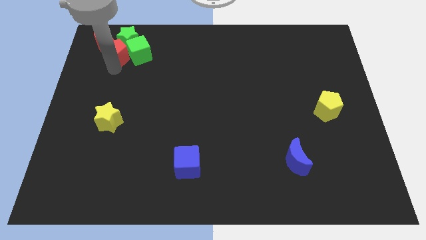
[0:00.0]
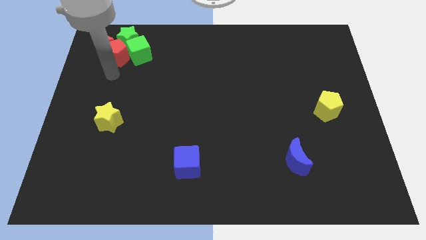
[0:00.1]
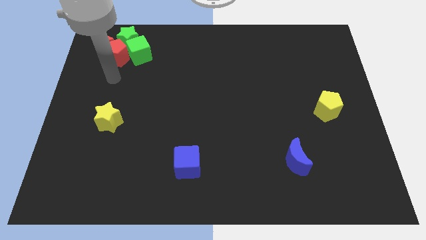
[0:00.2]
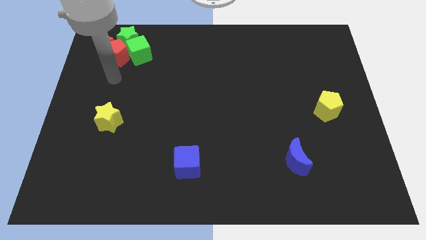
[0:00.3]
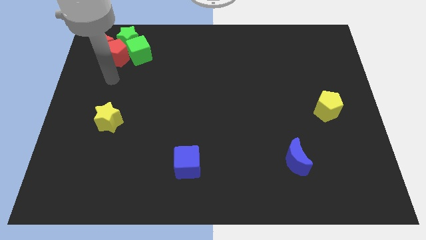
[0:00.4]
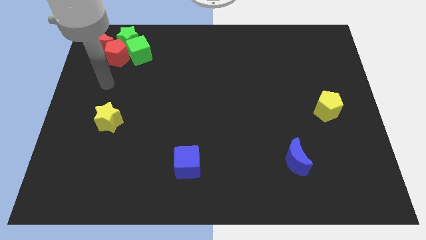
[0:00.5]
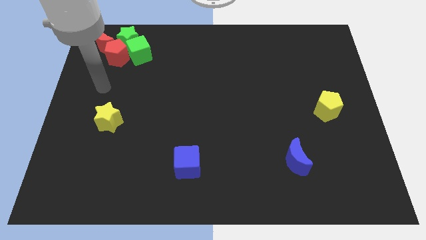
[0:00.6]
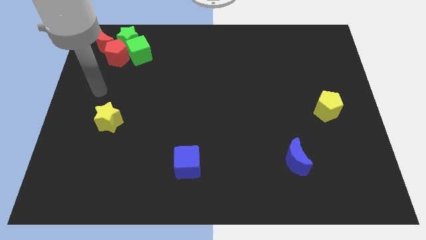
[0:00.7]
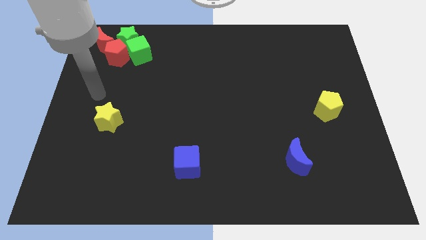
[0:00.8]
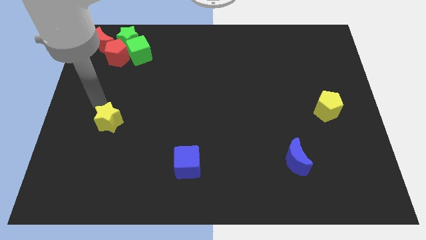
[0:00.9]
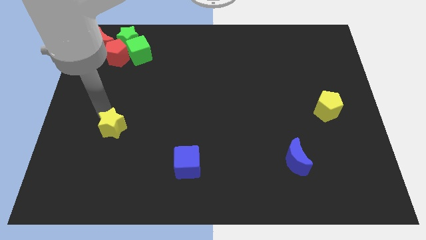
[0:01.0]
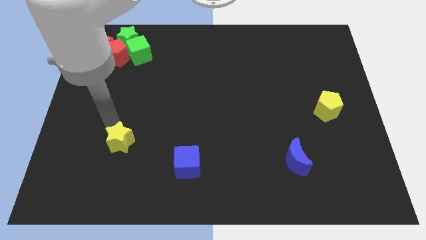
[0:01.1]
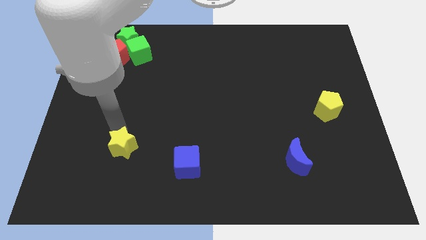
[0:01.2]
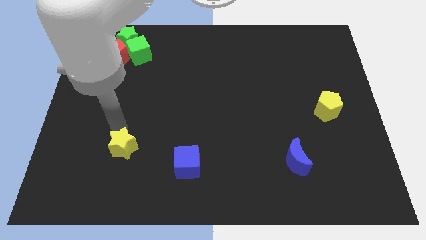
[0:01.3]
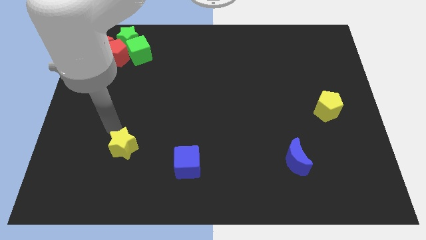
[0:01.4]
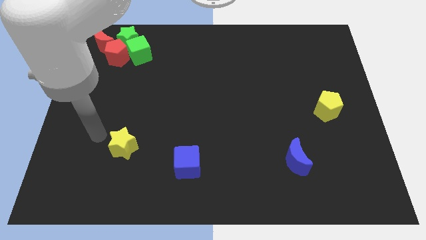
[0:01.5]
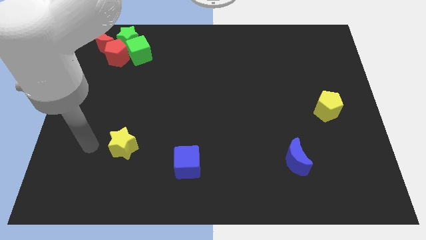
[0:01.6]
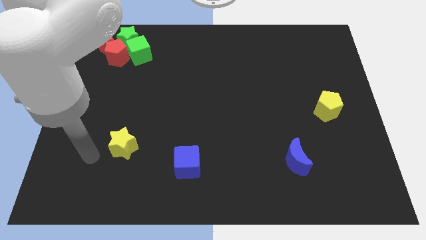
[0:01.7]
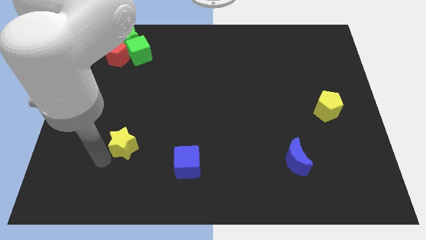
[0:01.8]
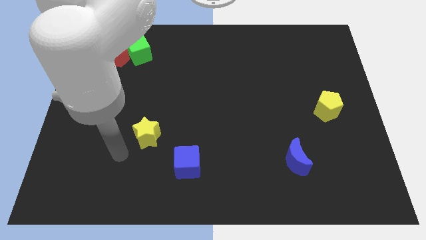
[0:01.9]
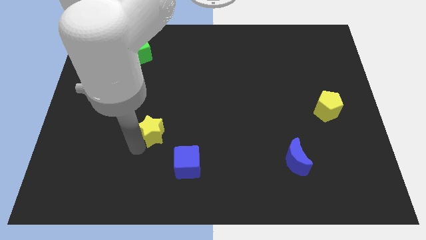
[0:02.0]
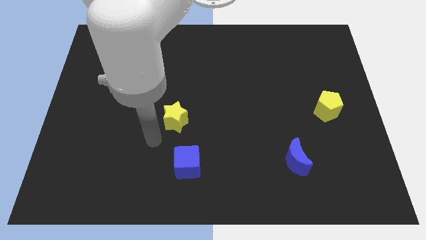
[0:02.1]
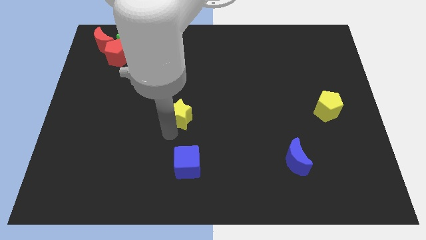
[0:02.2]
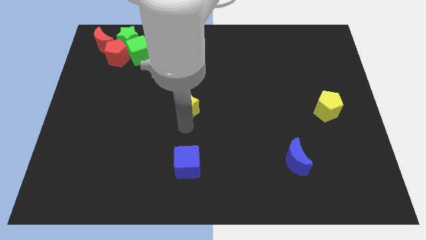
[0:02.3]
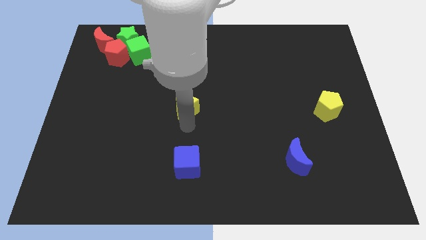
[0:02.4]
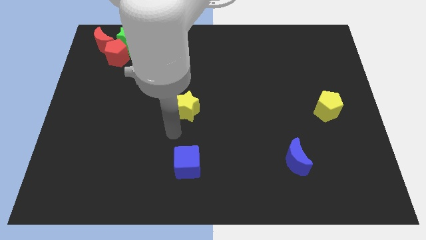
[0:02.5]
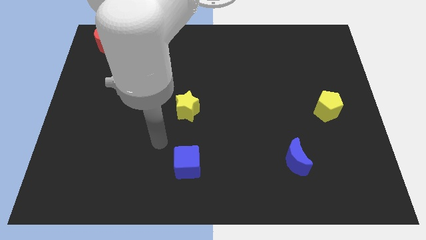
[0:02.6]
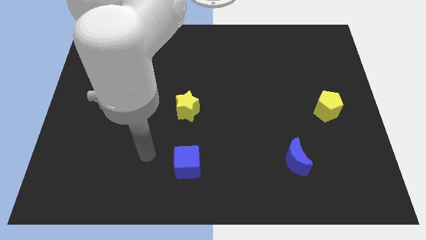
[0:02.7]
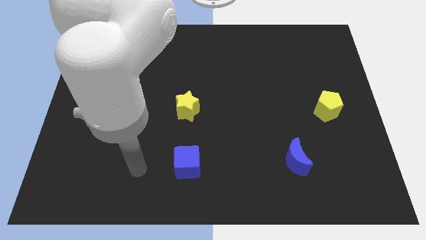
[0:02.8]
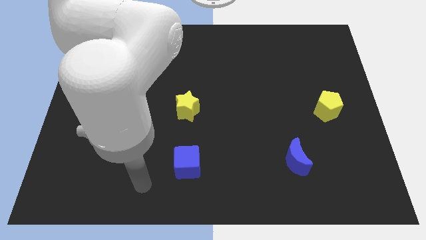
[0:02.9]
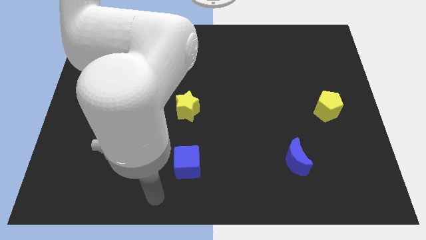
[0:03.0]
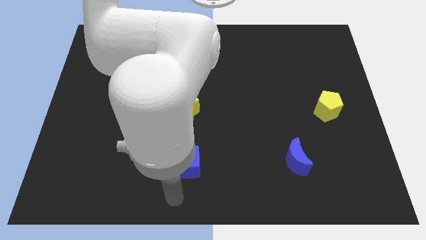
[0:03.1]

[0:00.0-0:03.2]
move the yellow star to the top of blue cube

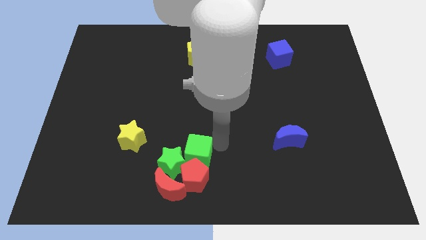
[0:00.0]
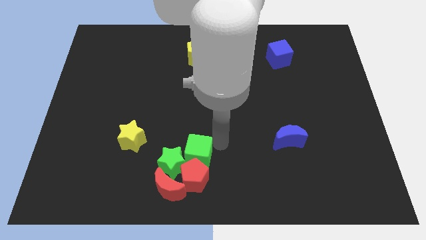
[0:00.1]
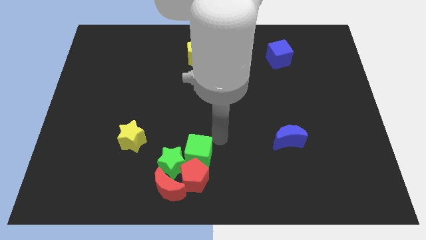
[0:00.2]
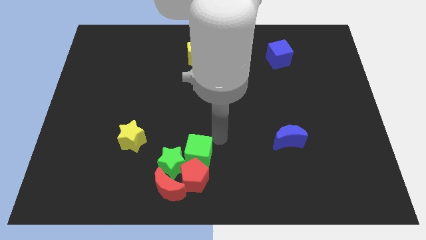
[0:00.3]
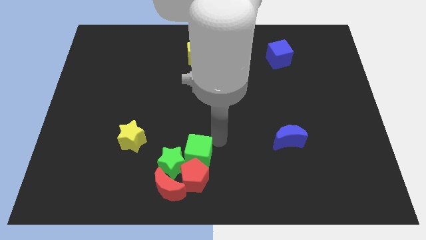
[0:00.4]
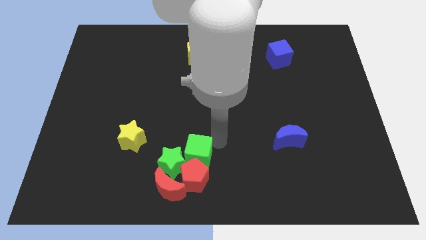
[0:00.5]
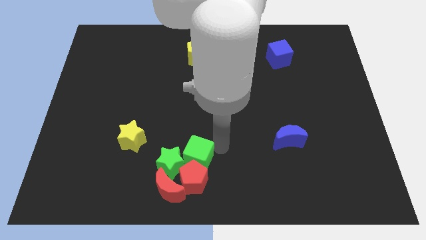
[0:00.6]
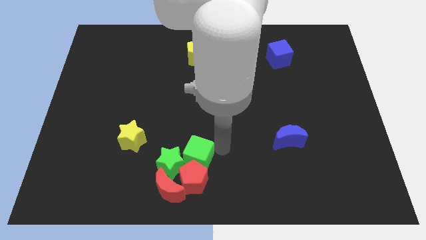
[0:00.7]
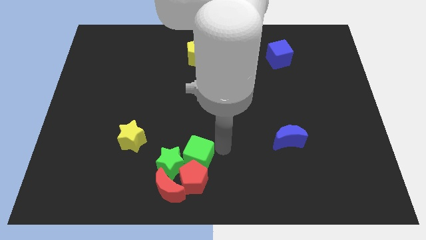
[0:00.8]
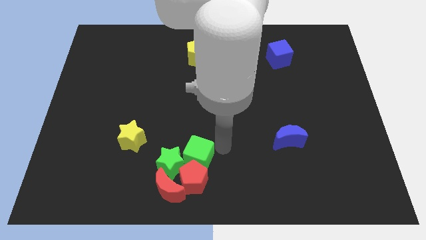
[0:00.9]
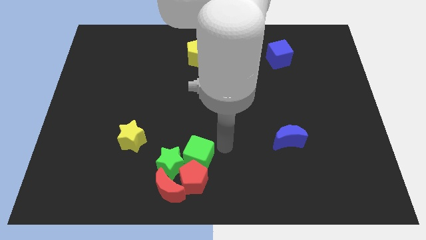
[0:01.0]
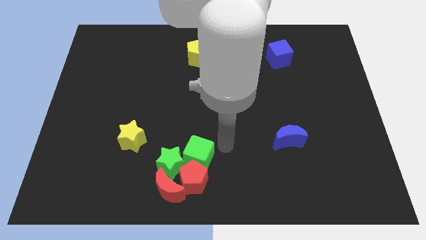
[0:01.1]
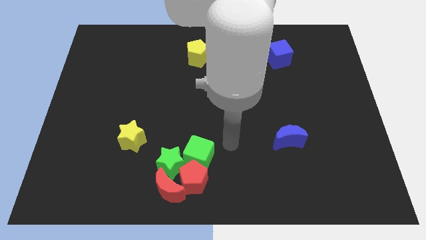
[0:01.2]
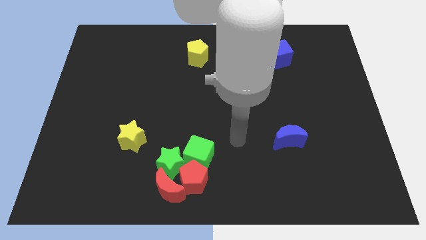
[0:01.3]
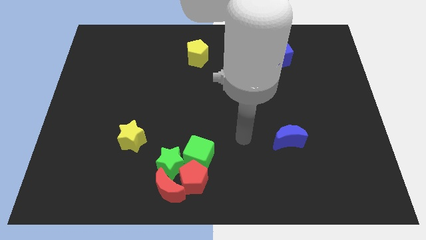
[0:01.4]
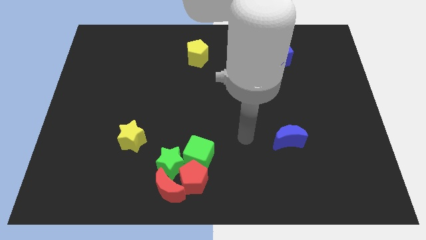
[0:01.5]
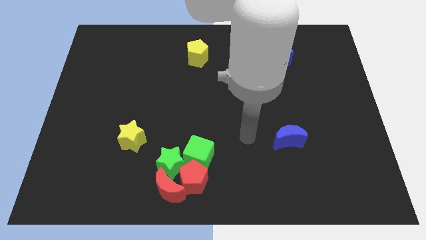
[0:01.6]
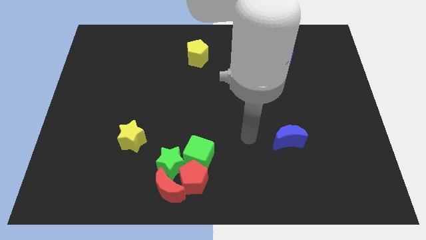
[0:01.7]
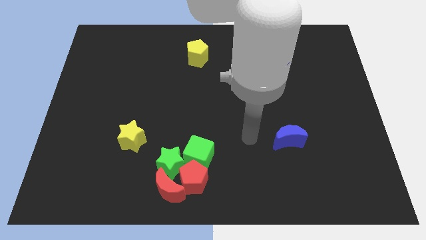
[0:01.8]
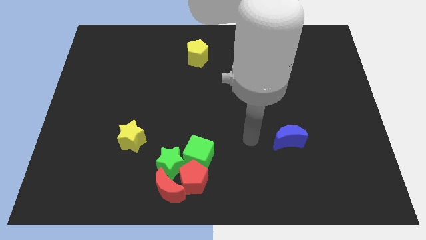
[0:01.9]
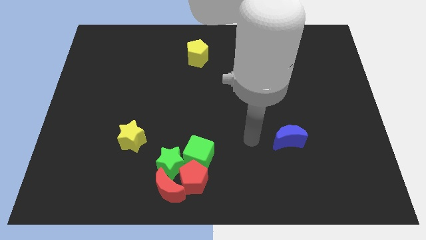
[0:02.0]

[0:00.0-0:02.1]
place the arm at the left of the blue crescent

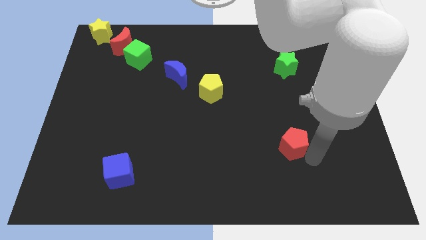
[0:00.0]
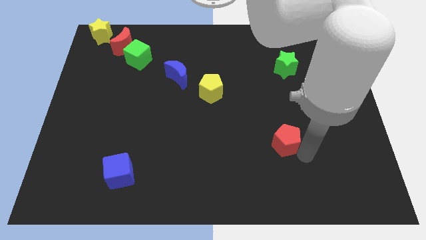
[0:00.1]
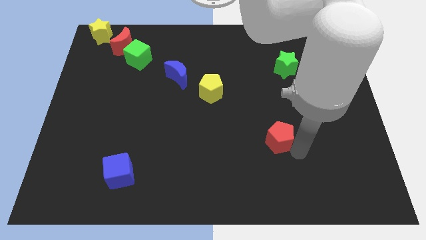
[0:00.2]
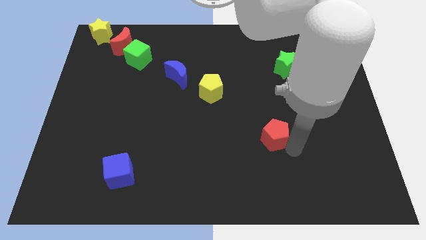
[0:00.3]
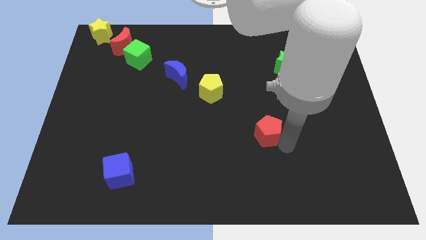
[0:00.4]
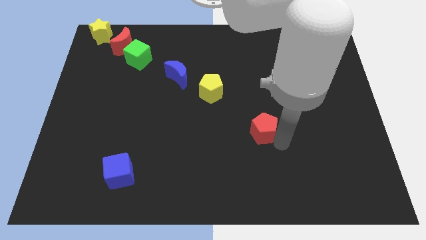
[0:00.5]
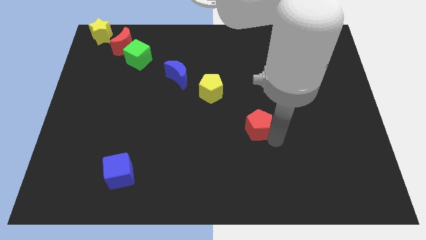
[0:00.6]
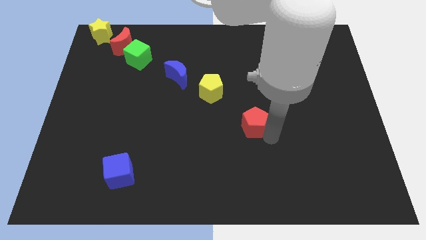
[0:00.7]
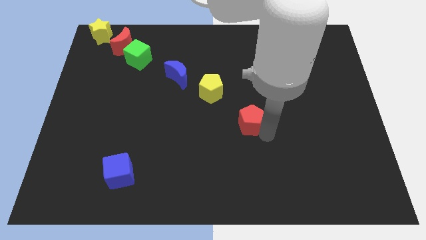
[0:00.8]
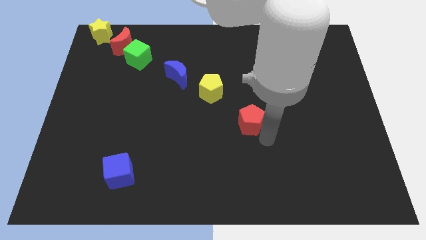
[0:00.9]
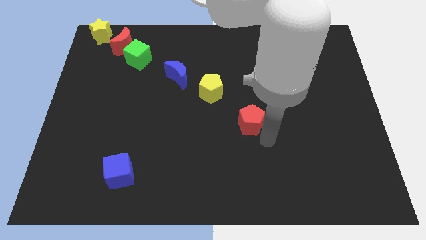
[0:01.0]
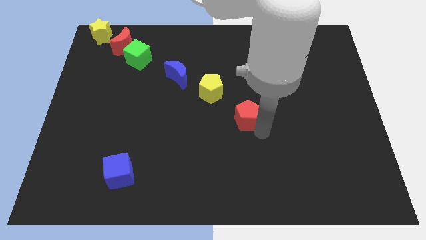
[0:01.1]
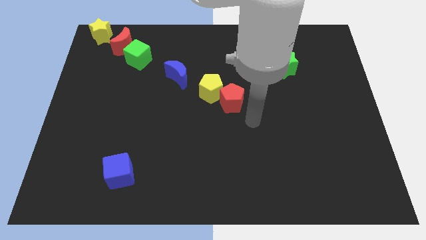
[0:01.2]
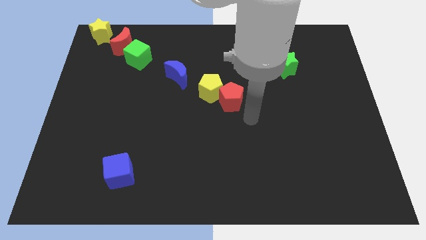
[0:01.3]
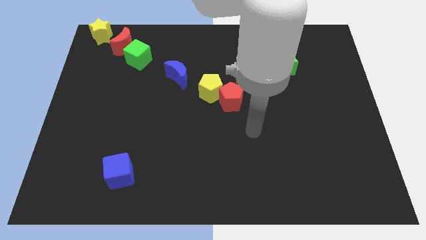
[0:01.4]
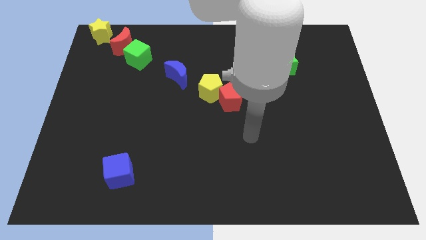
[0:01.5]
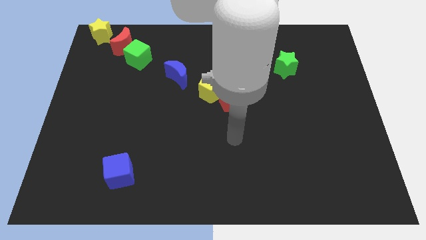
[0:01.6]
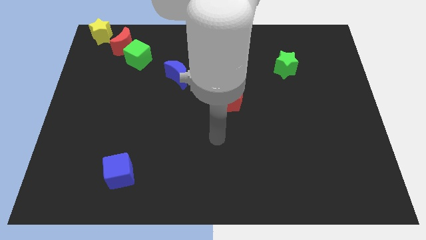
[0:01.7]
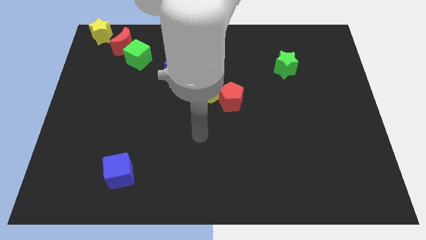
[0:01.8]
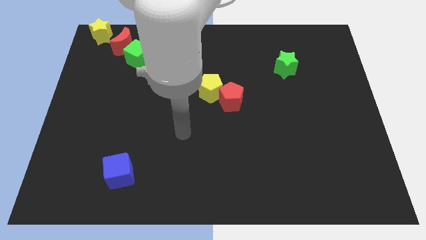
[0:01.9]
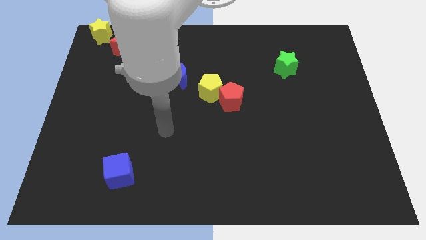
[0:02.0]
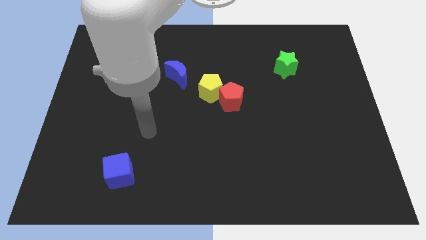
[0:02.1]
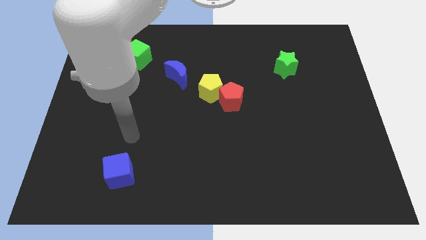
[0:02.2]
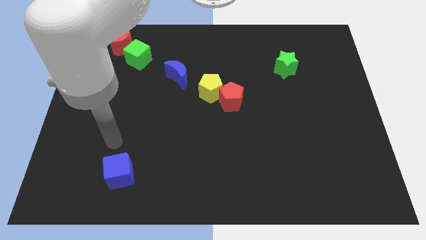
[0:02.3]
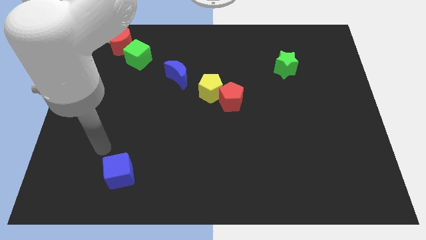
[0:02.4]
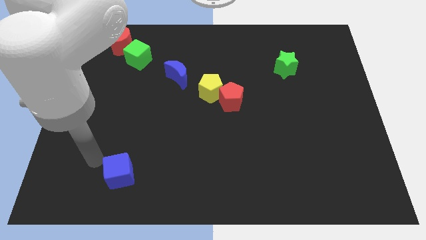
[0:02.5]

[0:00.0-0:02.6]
move the red pentagon into the yellow pentagon

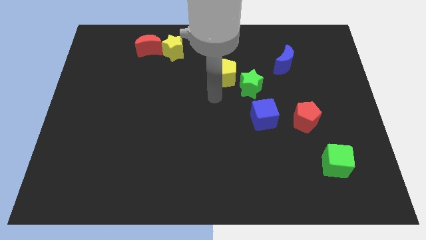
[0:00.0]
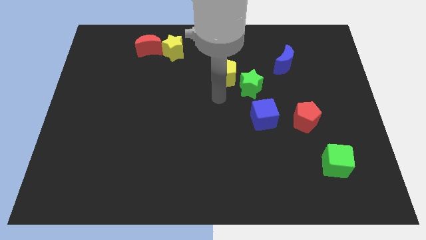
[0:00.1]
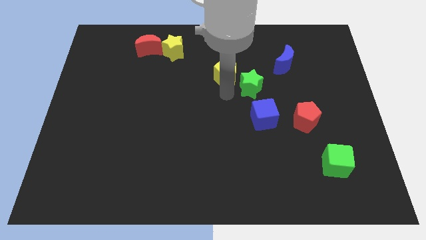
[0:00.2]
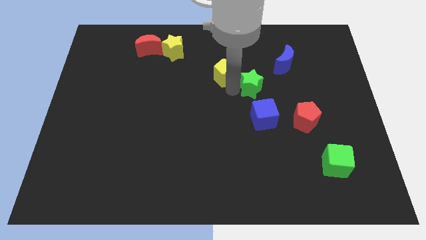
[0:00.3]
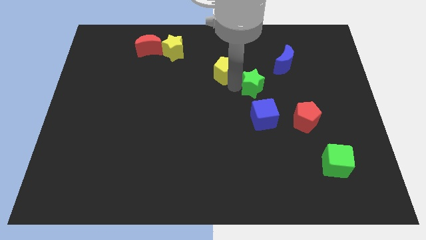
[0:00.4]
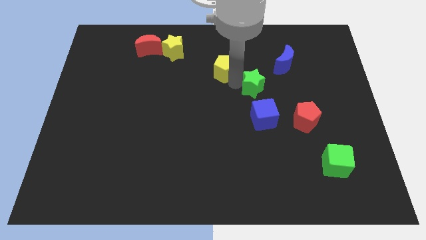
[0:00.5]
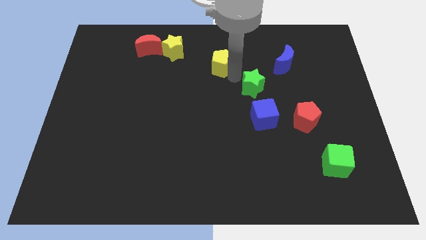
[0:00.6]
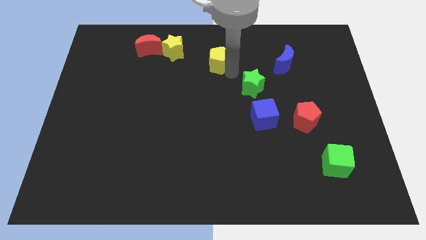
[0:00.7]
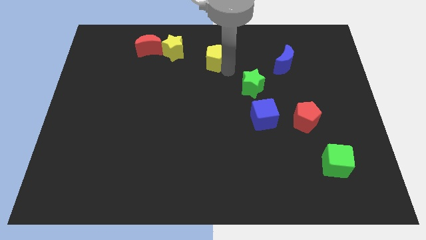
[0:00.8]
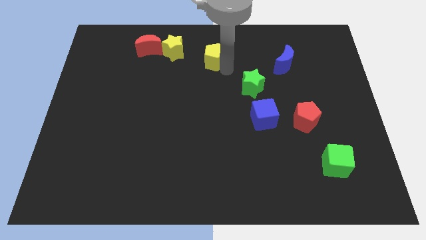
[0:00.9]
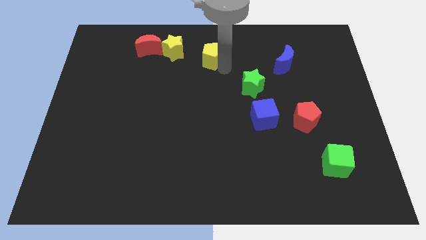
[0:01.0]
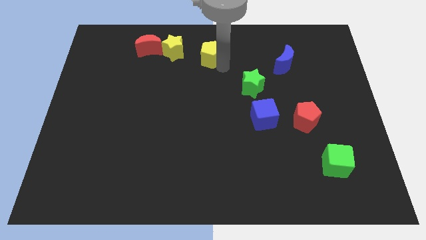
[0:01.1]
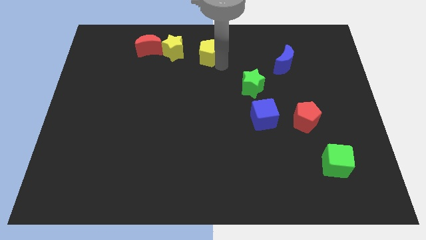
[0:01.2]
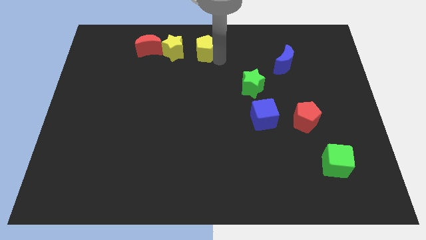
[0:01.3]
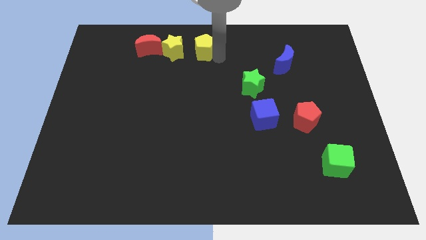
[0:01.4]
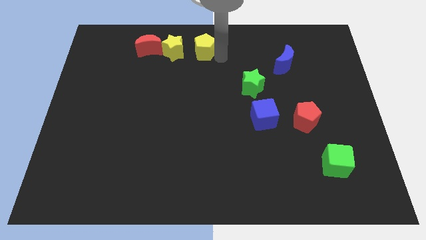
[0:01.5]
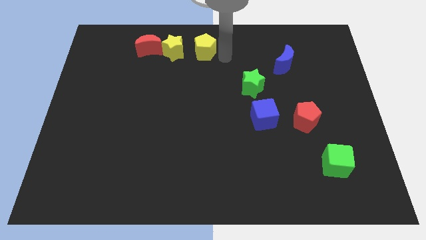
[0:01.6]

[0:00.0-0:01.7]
push the yellow pentagon to the right of the yellow star
